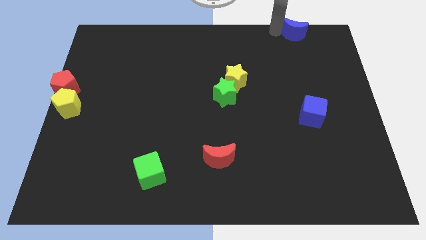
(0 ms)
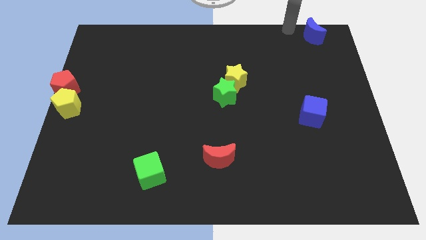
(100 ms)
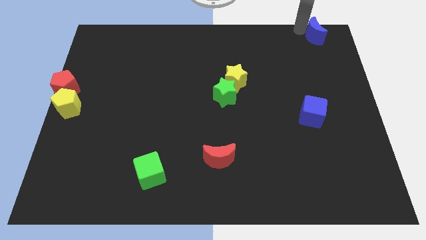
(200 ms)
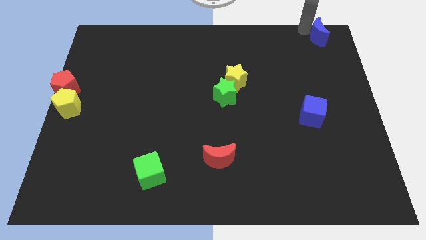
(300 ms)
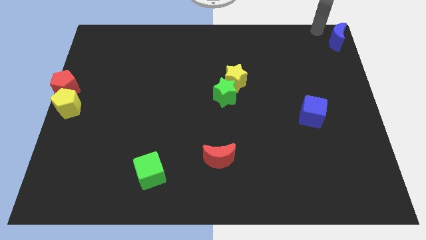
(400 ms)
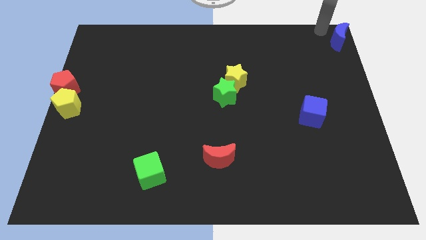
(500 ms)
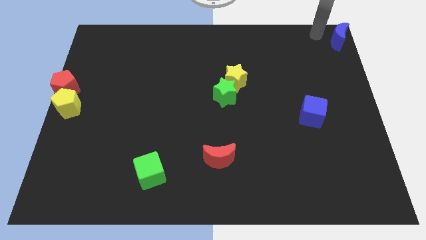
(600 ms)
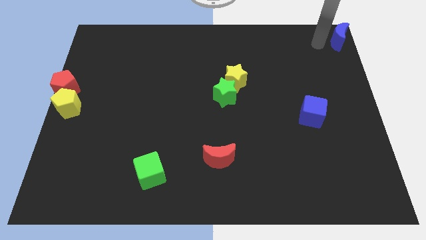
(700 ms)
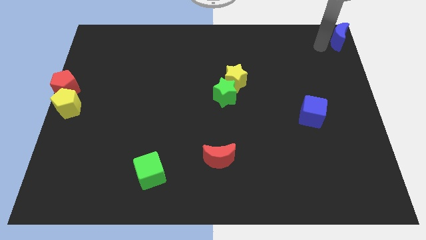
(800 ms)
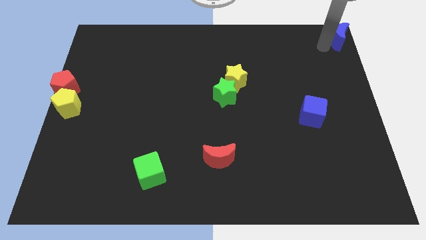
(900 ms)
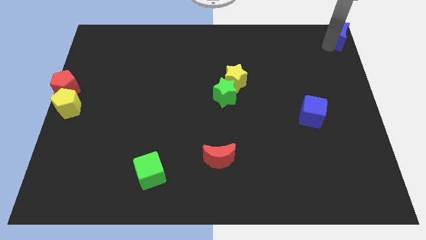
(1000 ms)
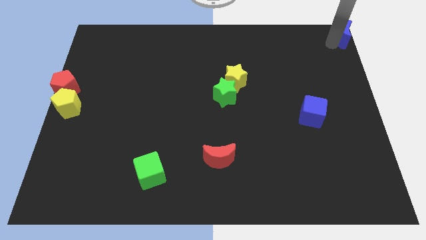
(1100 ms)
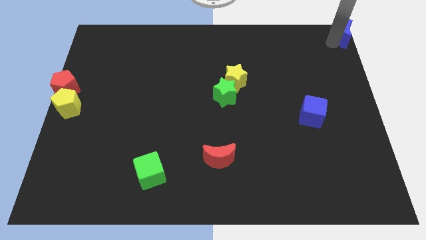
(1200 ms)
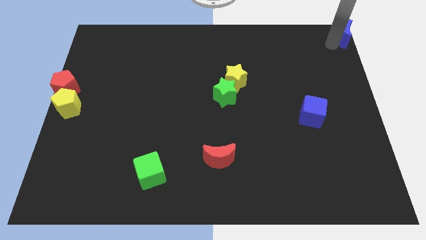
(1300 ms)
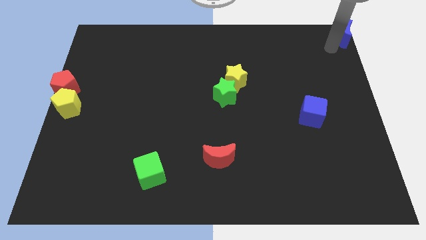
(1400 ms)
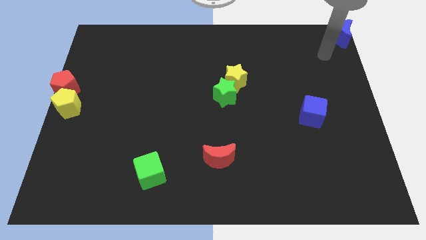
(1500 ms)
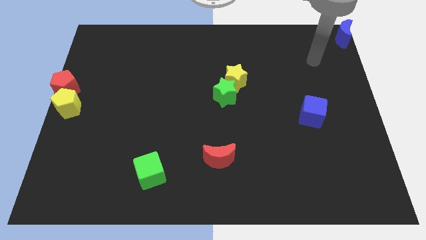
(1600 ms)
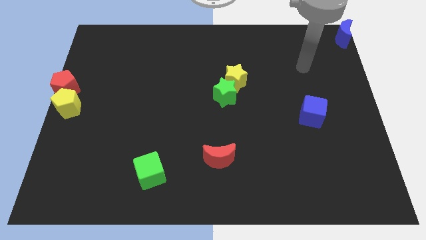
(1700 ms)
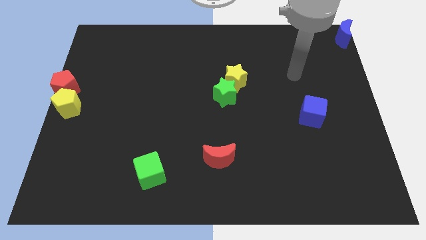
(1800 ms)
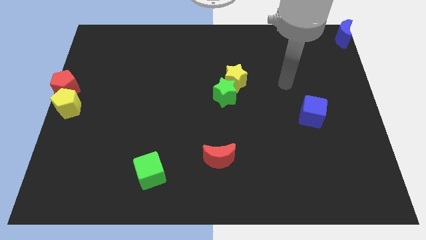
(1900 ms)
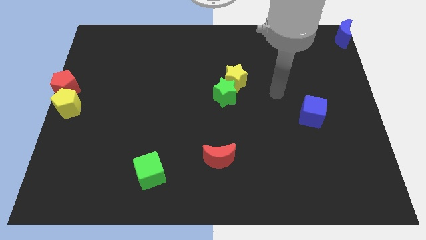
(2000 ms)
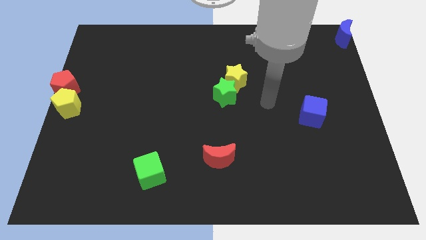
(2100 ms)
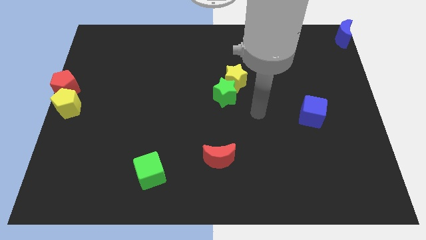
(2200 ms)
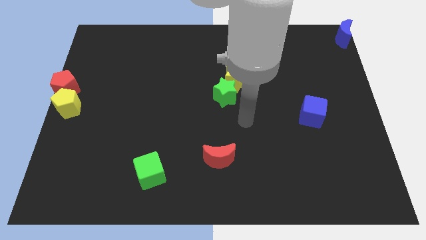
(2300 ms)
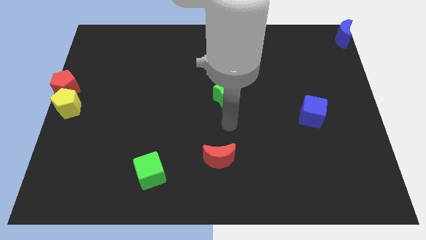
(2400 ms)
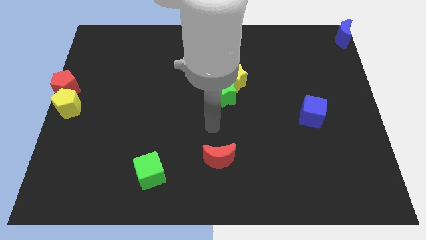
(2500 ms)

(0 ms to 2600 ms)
put the blue crescent at the top right corner of the board

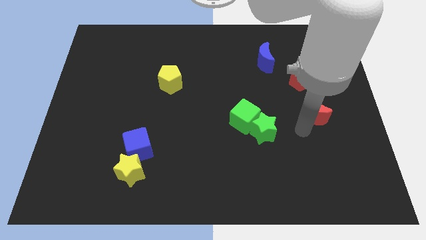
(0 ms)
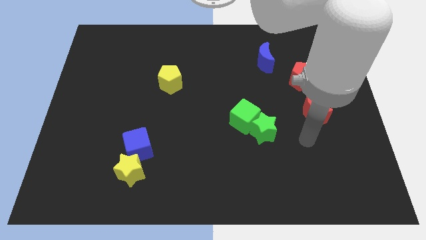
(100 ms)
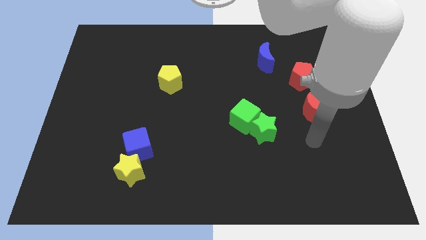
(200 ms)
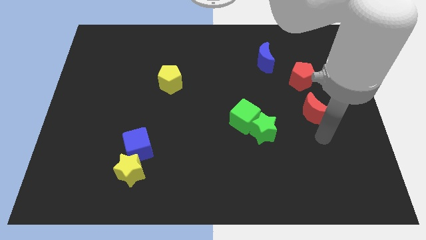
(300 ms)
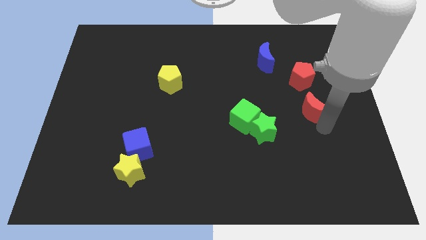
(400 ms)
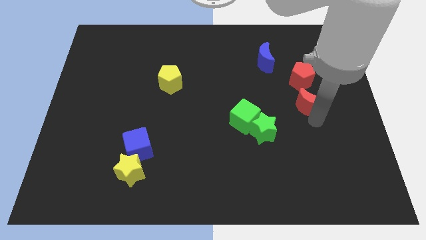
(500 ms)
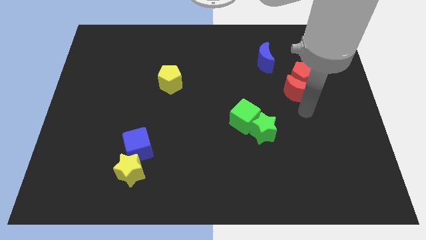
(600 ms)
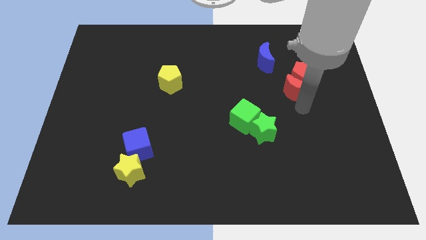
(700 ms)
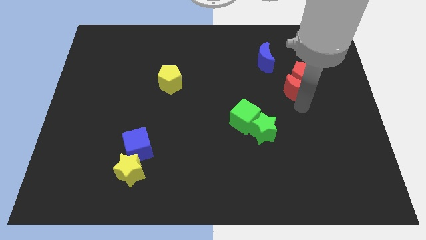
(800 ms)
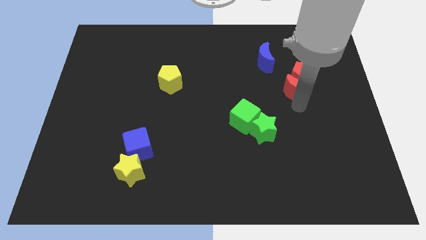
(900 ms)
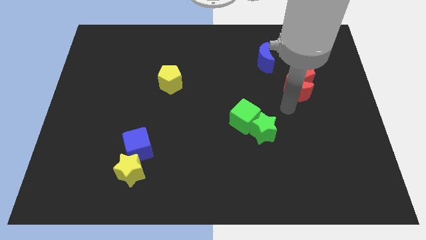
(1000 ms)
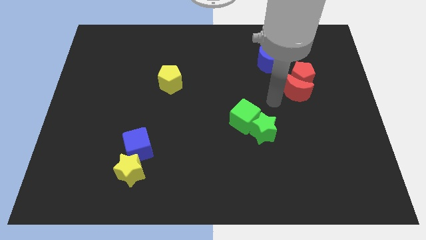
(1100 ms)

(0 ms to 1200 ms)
push the red crescent into the red pentagon

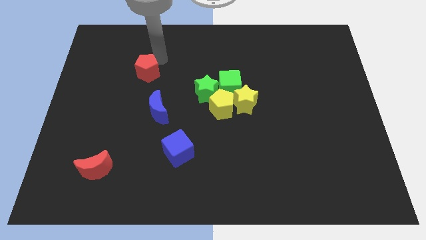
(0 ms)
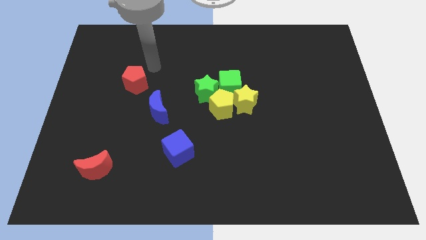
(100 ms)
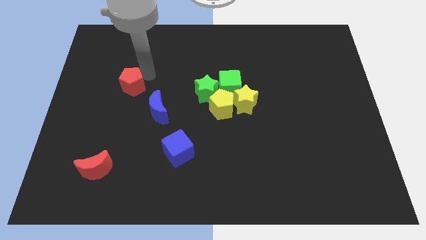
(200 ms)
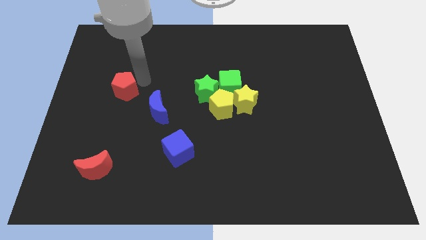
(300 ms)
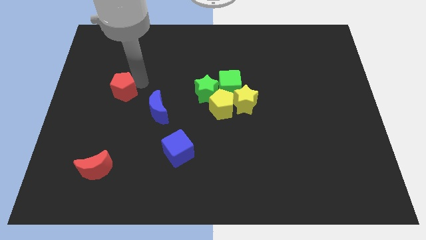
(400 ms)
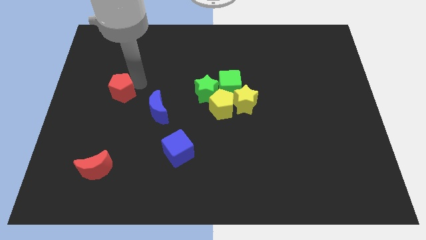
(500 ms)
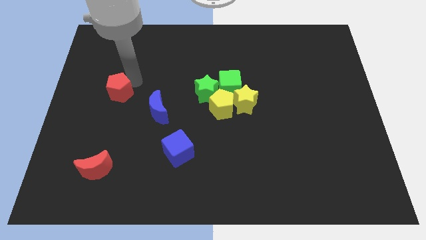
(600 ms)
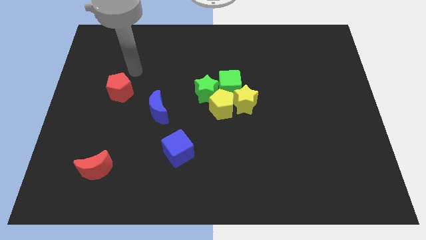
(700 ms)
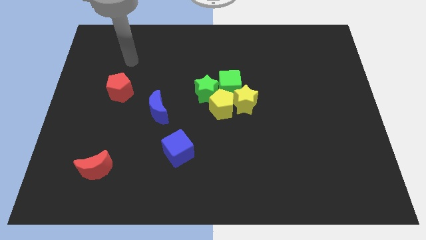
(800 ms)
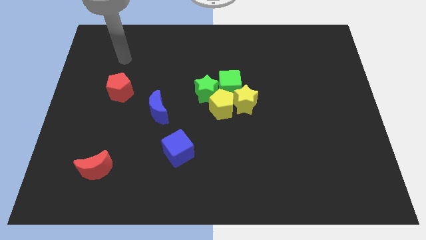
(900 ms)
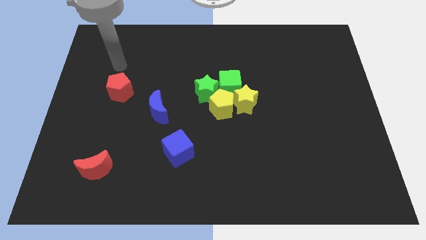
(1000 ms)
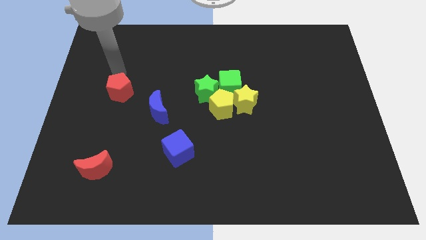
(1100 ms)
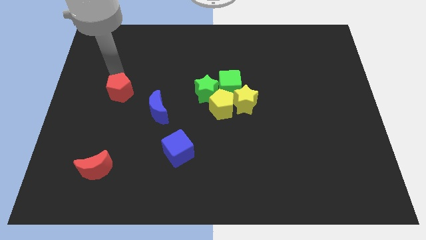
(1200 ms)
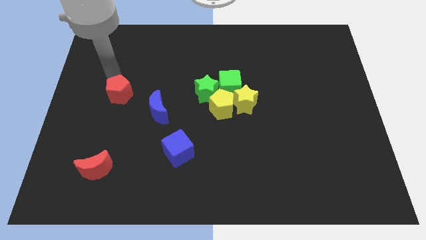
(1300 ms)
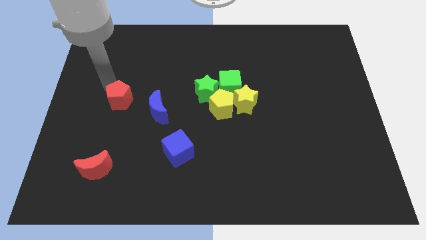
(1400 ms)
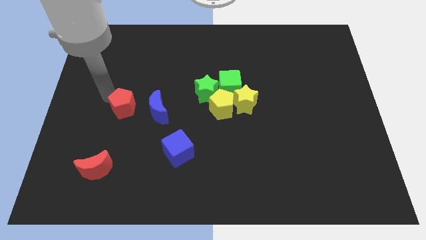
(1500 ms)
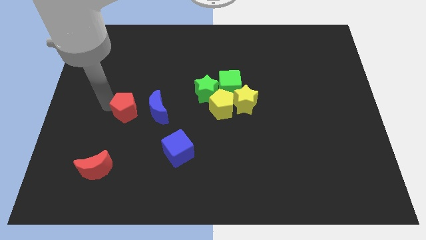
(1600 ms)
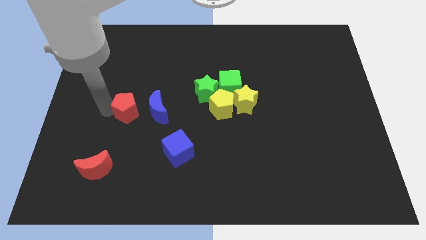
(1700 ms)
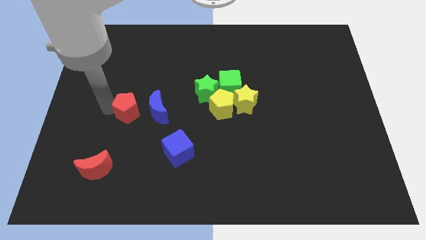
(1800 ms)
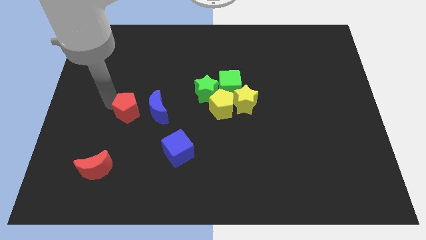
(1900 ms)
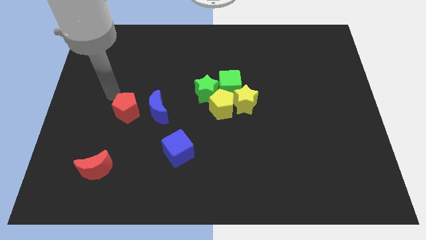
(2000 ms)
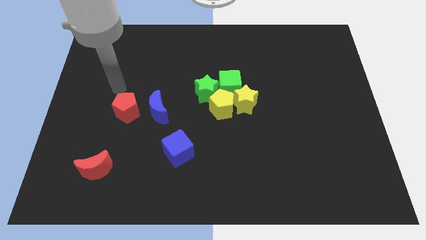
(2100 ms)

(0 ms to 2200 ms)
slide the red pentagon towards the left side of the blue moon

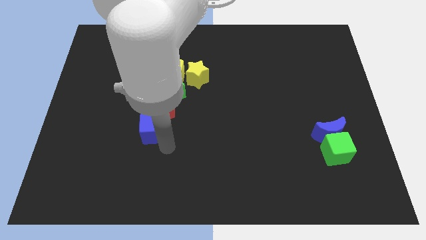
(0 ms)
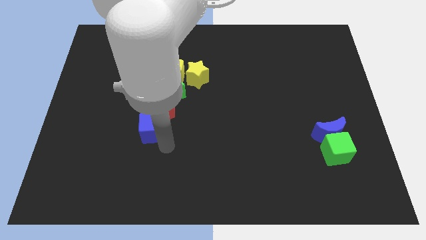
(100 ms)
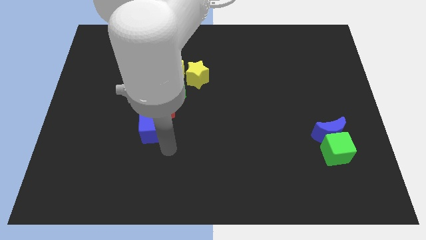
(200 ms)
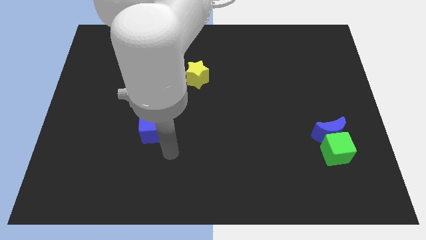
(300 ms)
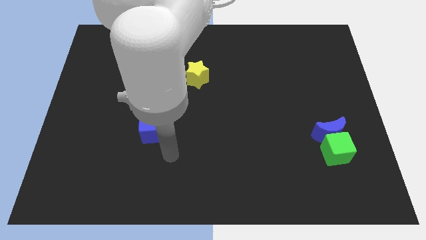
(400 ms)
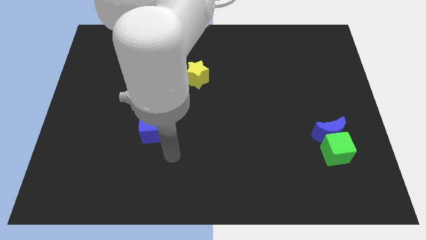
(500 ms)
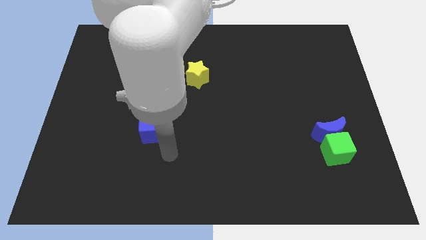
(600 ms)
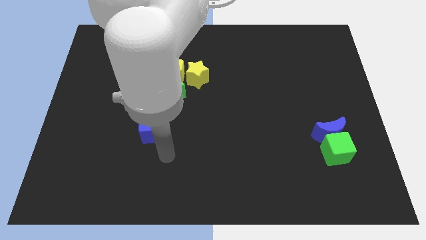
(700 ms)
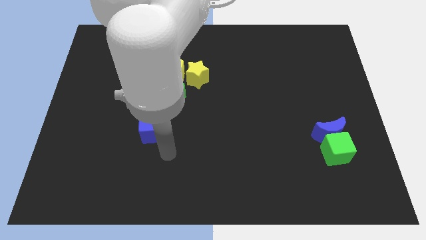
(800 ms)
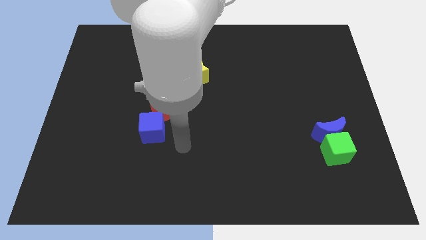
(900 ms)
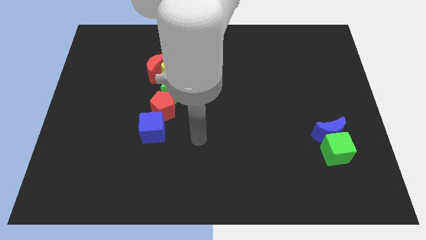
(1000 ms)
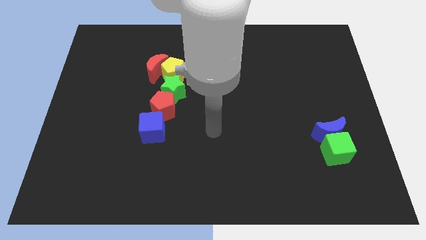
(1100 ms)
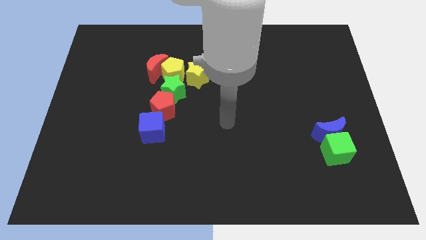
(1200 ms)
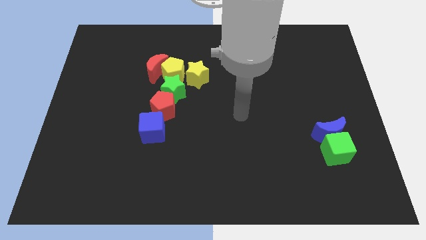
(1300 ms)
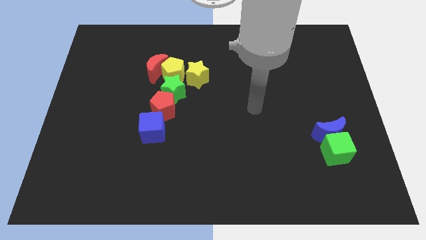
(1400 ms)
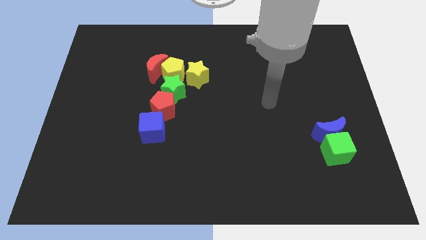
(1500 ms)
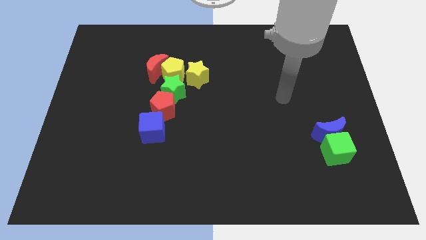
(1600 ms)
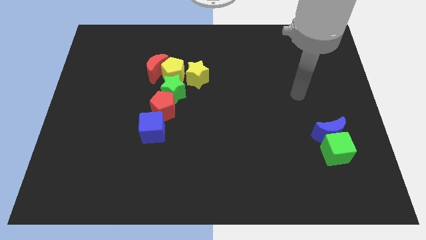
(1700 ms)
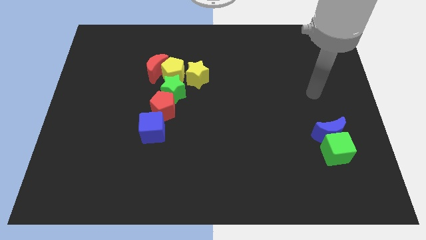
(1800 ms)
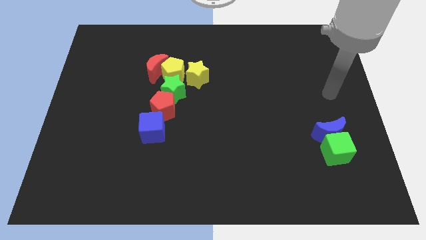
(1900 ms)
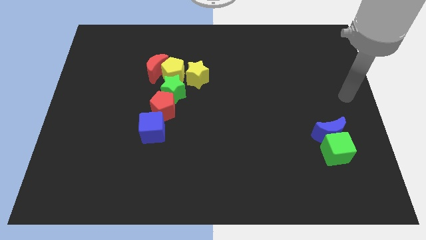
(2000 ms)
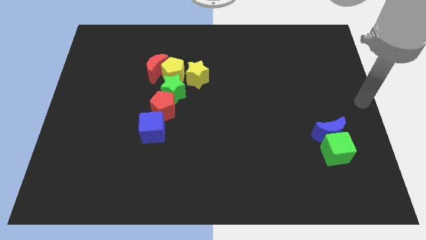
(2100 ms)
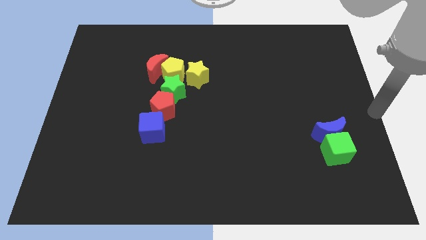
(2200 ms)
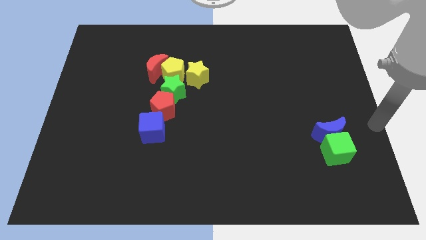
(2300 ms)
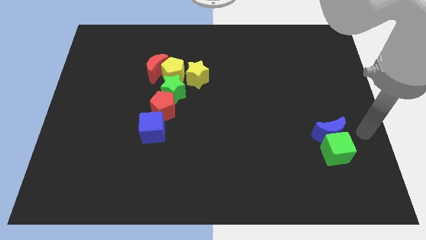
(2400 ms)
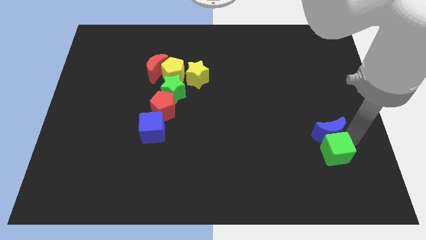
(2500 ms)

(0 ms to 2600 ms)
move your arm to the right of the green cube

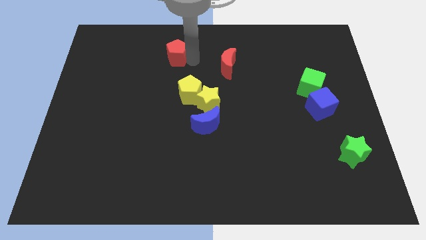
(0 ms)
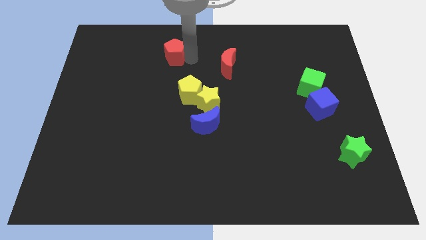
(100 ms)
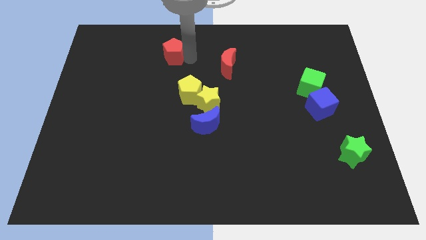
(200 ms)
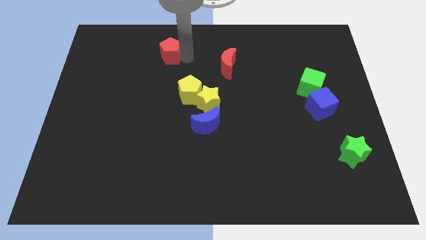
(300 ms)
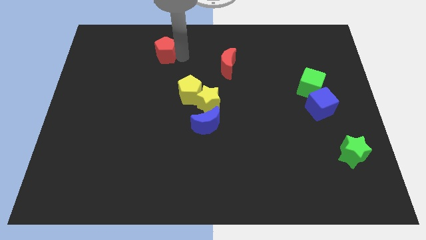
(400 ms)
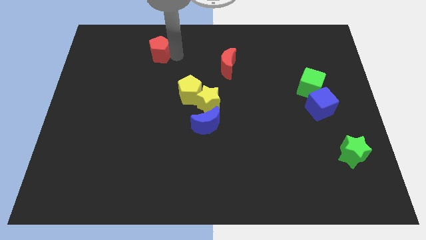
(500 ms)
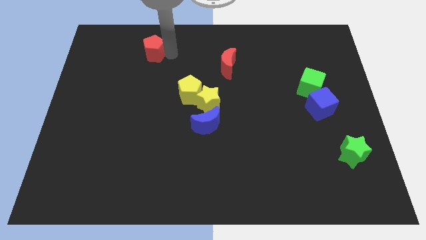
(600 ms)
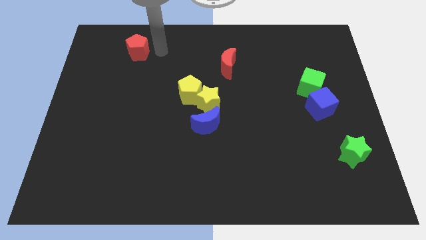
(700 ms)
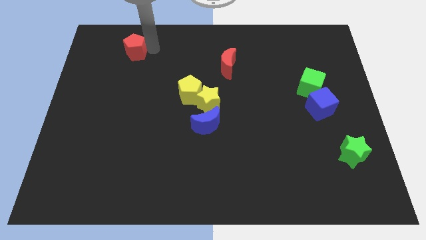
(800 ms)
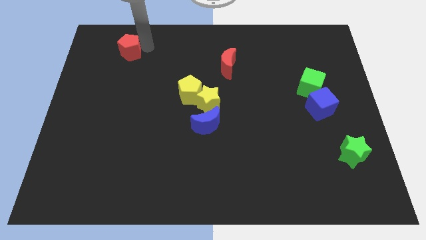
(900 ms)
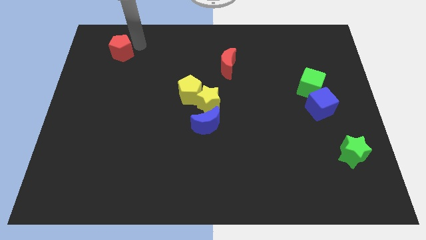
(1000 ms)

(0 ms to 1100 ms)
move red pentagon towards top left
